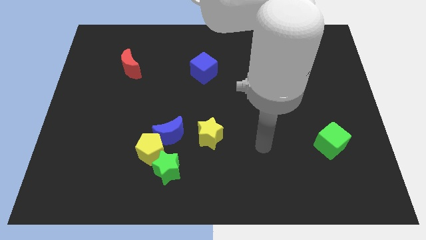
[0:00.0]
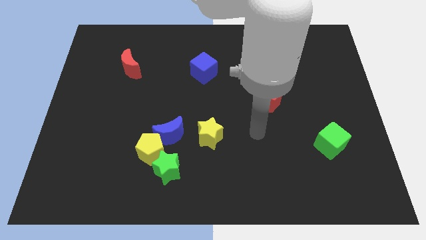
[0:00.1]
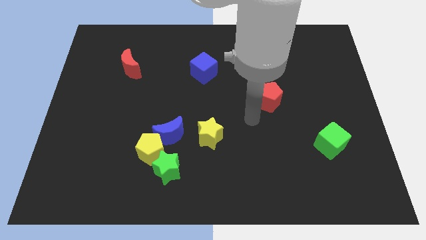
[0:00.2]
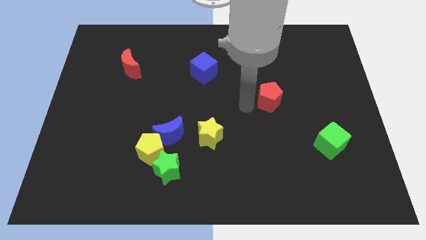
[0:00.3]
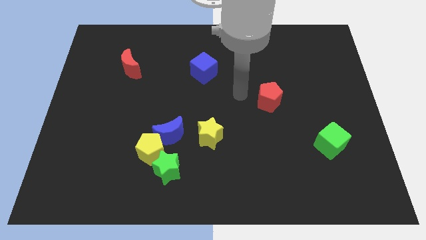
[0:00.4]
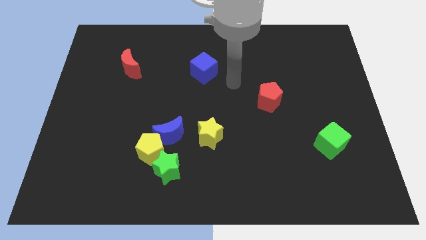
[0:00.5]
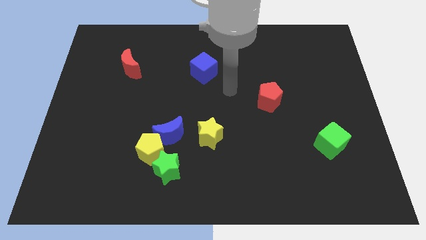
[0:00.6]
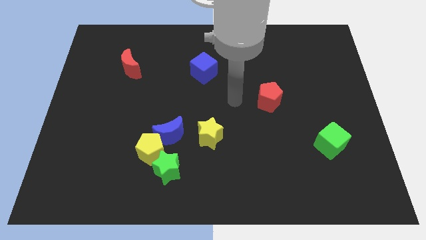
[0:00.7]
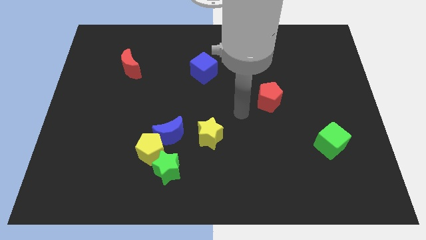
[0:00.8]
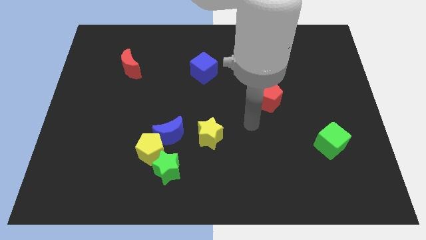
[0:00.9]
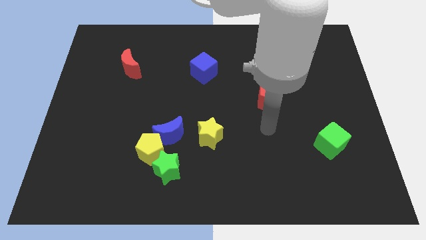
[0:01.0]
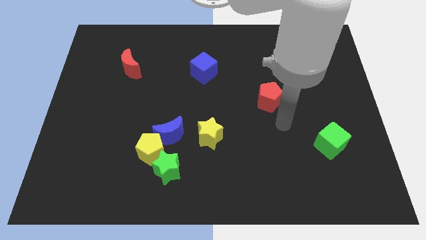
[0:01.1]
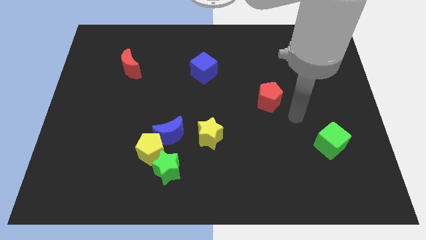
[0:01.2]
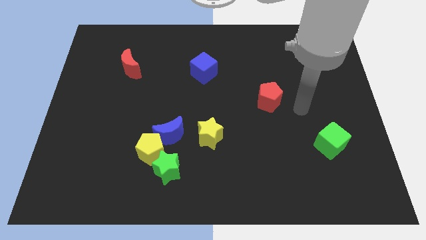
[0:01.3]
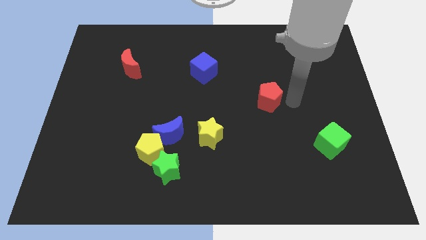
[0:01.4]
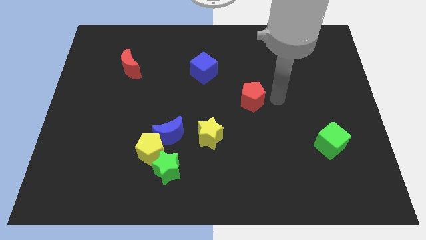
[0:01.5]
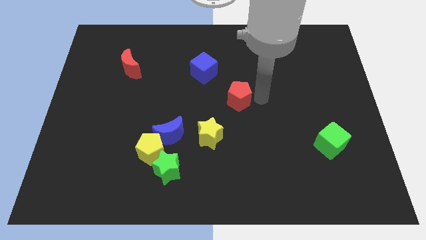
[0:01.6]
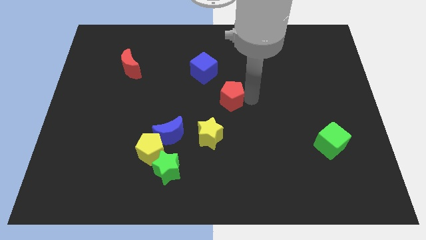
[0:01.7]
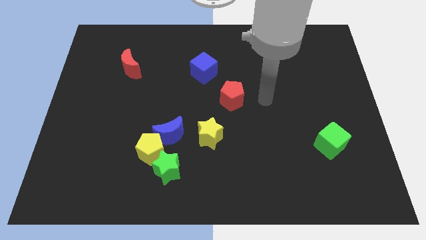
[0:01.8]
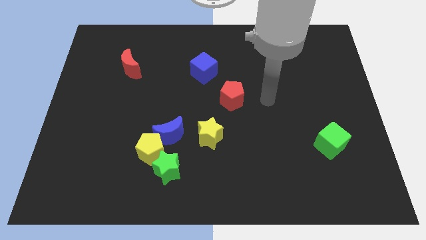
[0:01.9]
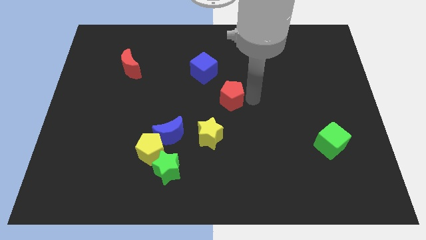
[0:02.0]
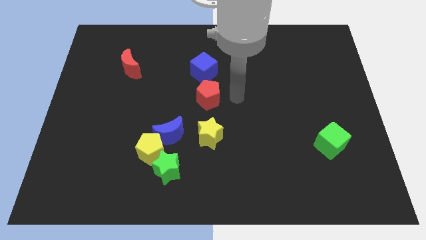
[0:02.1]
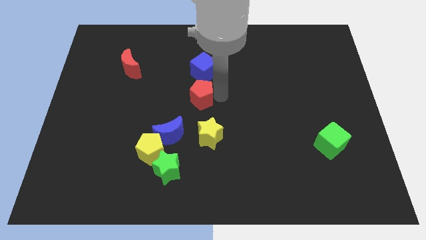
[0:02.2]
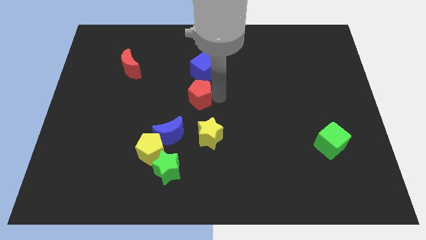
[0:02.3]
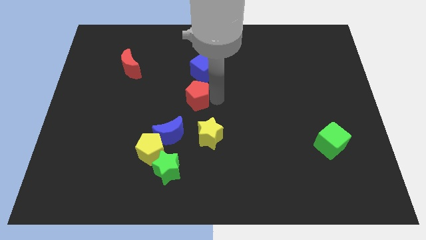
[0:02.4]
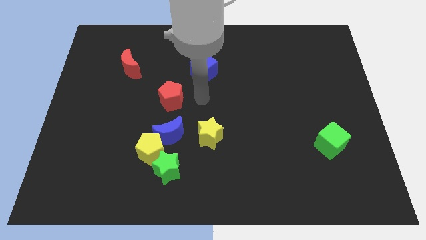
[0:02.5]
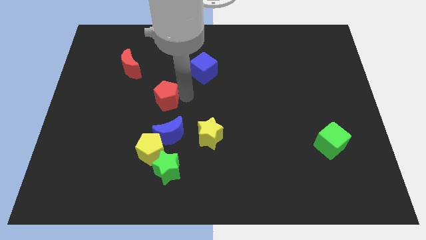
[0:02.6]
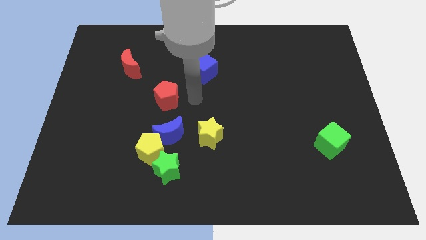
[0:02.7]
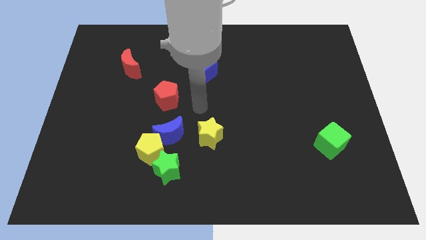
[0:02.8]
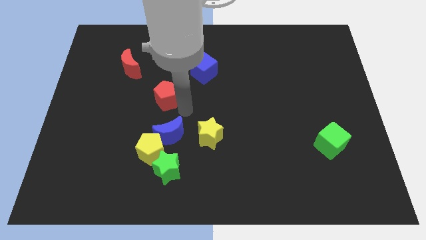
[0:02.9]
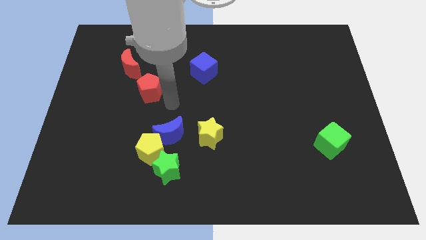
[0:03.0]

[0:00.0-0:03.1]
place the red pentagon above the yellow pentagon

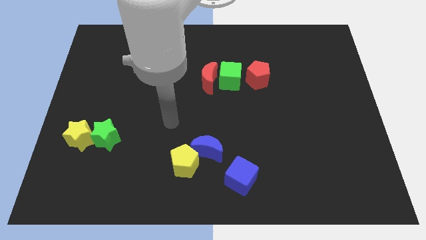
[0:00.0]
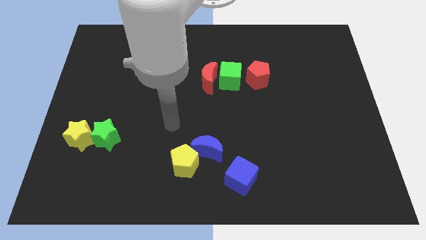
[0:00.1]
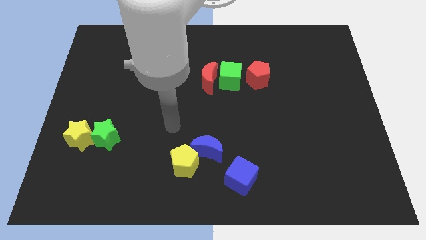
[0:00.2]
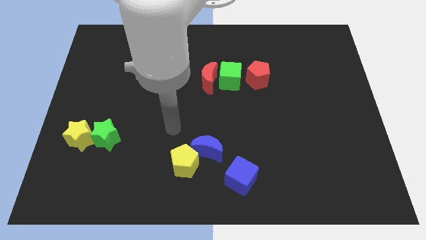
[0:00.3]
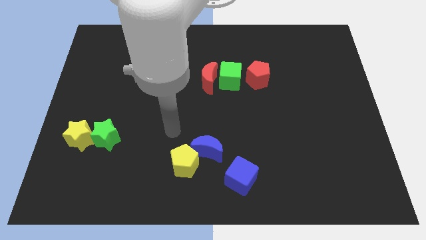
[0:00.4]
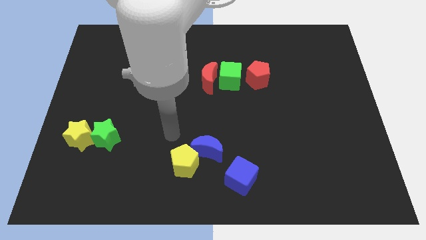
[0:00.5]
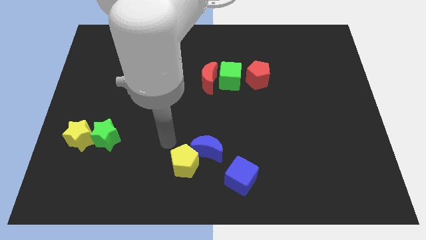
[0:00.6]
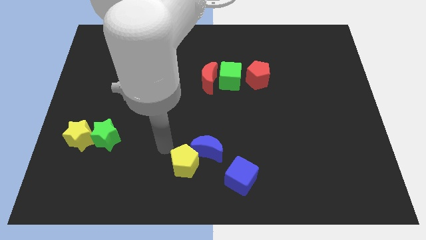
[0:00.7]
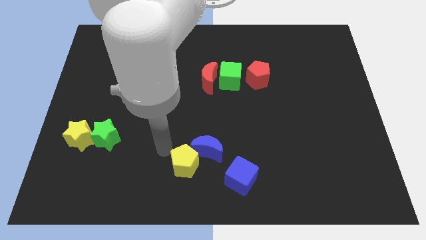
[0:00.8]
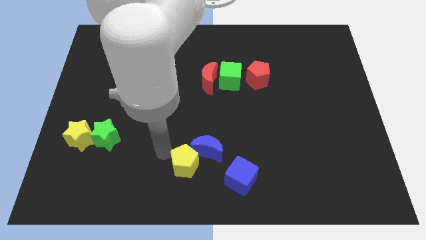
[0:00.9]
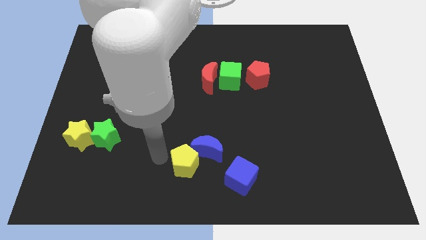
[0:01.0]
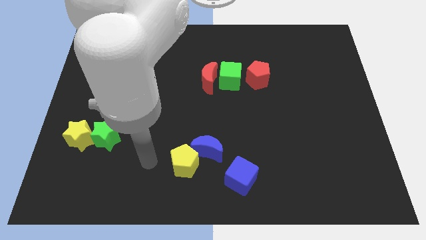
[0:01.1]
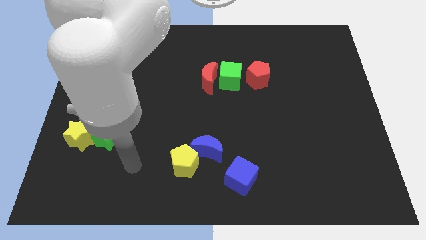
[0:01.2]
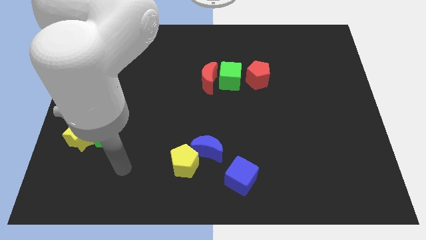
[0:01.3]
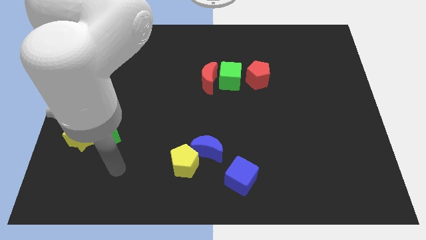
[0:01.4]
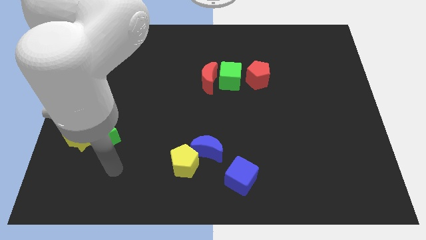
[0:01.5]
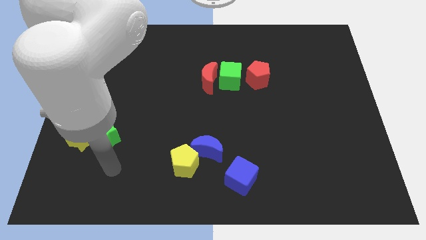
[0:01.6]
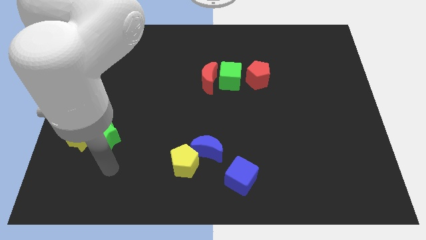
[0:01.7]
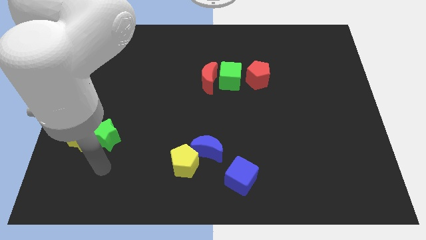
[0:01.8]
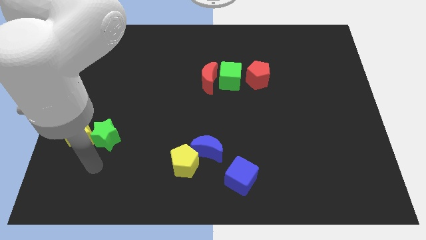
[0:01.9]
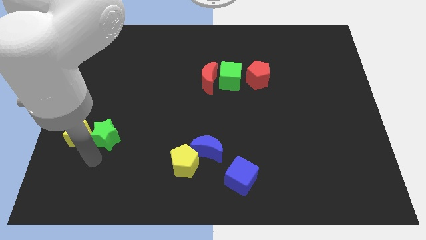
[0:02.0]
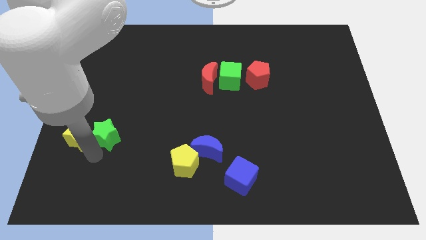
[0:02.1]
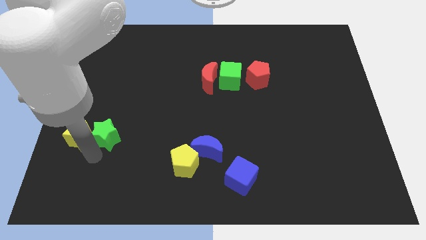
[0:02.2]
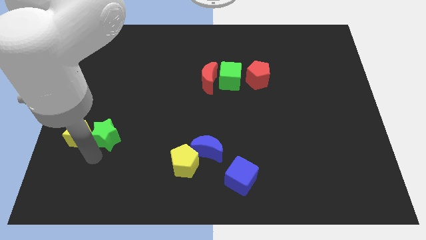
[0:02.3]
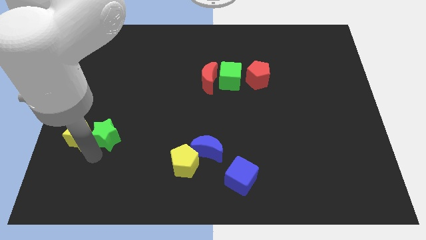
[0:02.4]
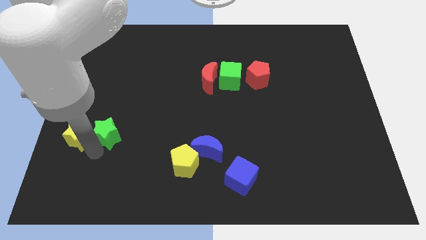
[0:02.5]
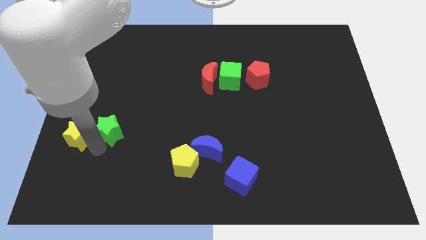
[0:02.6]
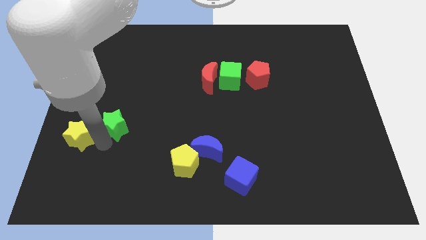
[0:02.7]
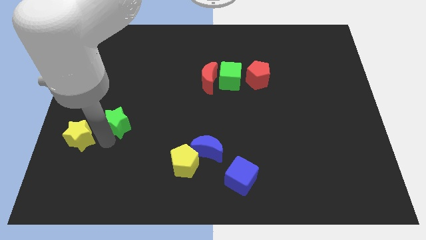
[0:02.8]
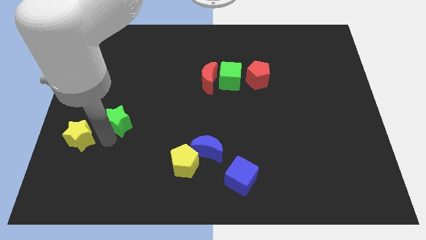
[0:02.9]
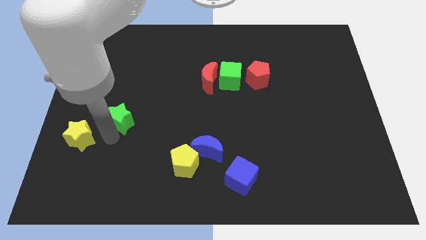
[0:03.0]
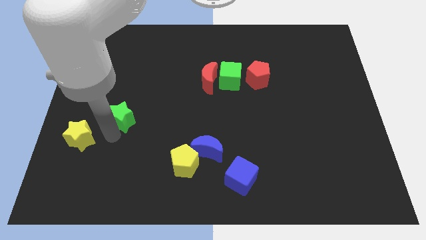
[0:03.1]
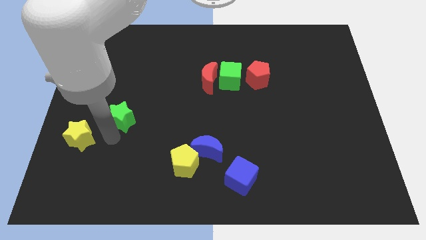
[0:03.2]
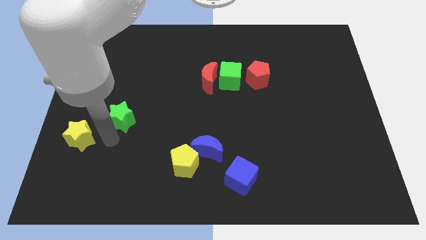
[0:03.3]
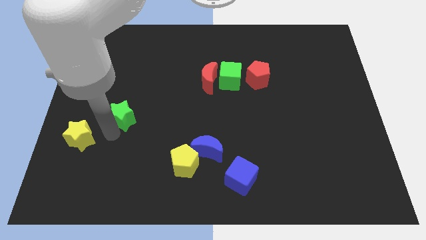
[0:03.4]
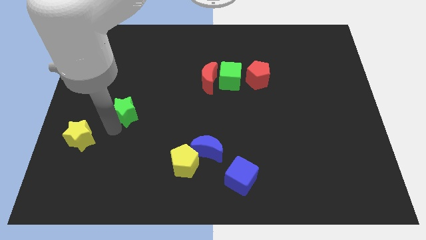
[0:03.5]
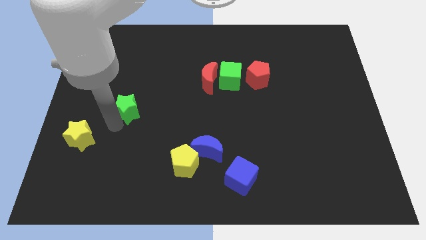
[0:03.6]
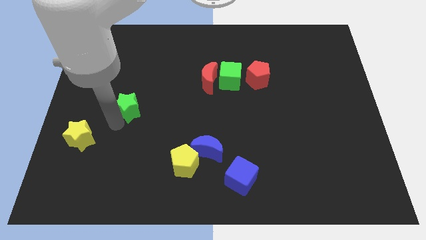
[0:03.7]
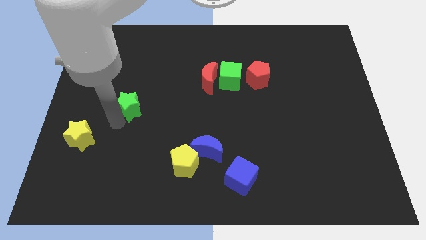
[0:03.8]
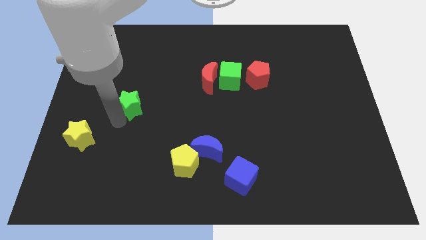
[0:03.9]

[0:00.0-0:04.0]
separate yellow star and green star

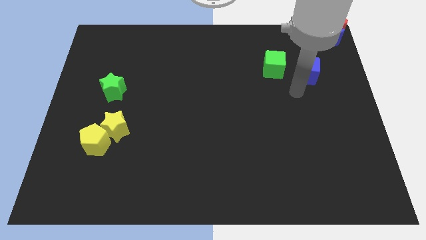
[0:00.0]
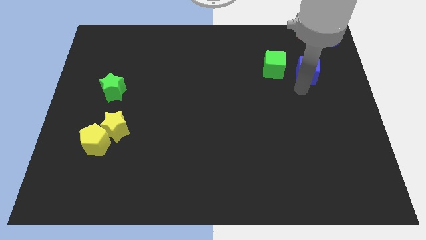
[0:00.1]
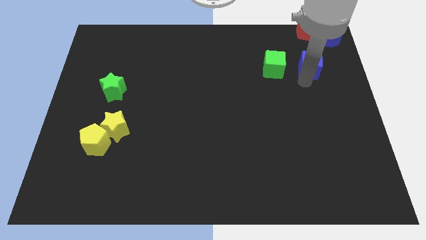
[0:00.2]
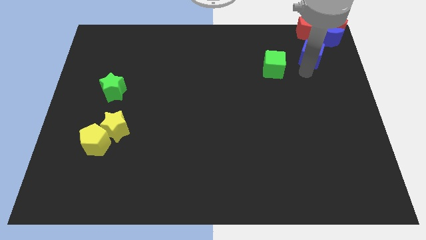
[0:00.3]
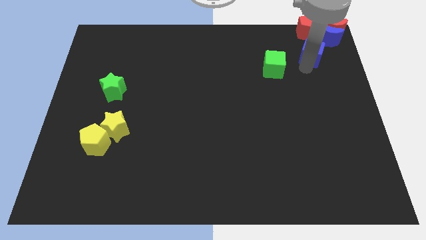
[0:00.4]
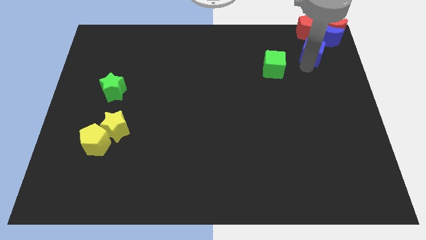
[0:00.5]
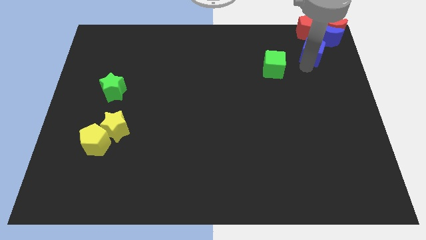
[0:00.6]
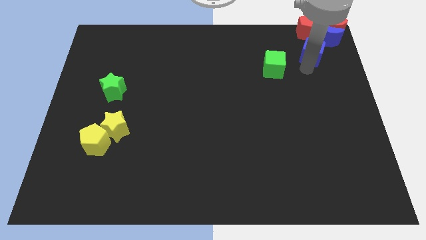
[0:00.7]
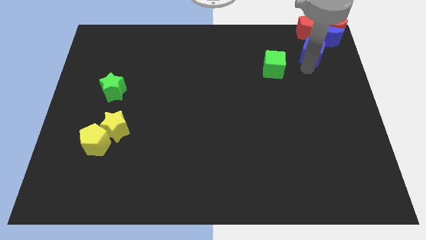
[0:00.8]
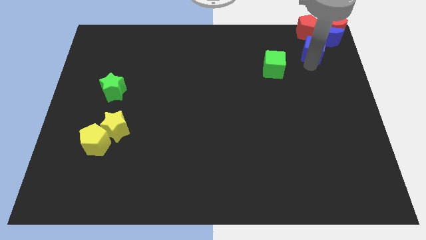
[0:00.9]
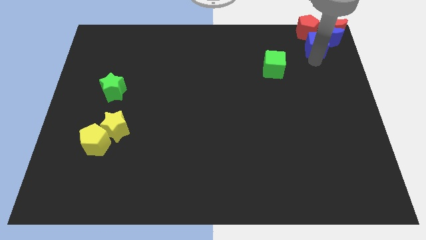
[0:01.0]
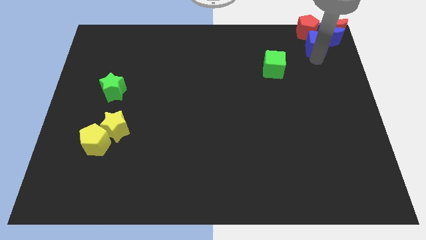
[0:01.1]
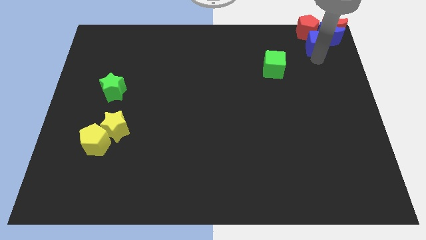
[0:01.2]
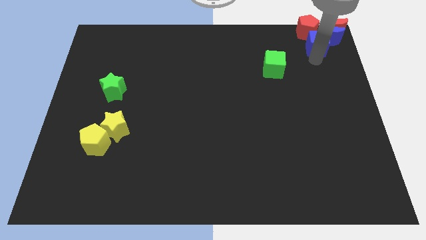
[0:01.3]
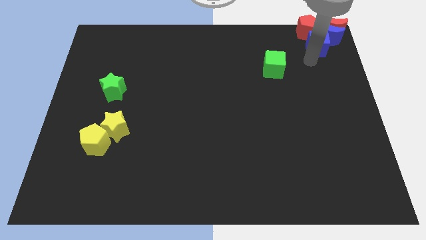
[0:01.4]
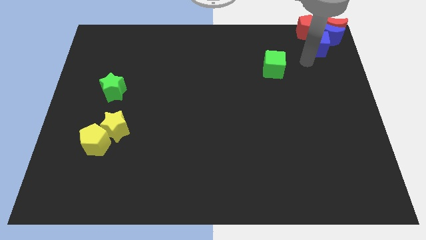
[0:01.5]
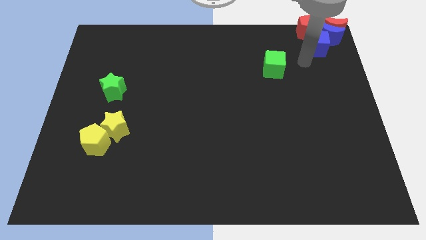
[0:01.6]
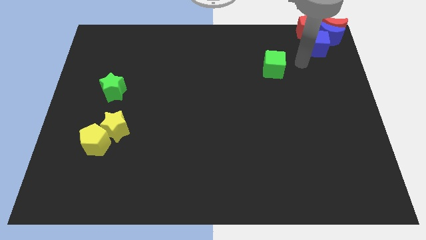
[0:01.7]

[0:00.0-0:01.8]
move the blue cube below the blue crescent and red pentagon

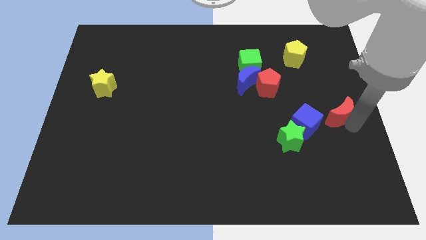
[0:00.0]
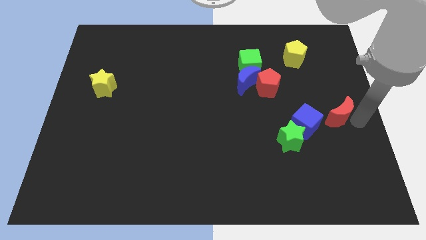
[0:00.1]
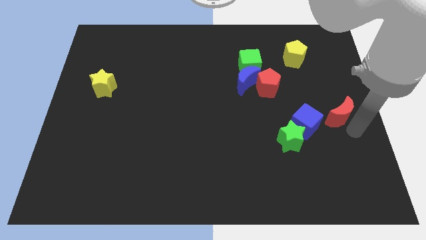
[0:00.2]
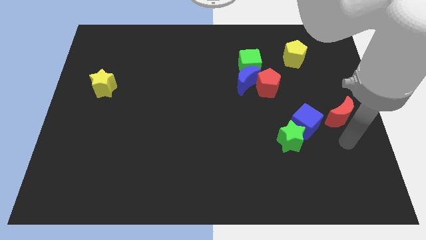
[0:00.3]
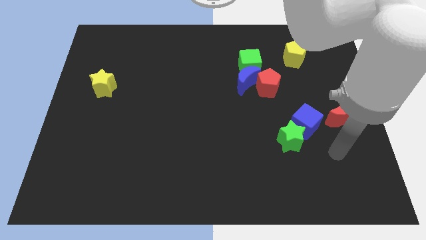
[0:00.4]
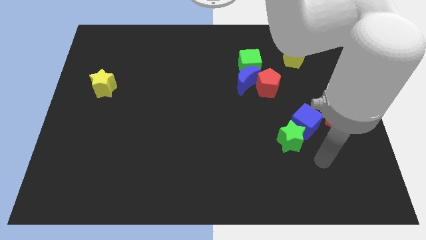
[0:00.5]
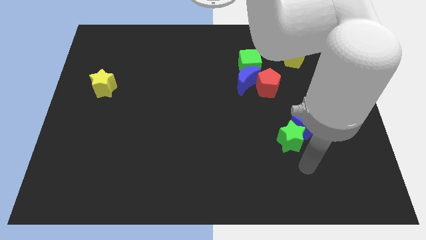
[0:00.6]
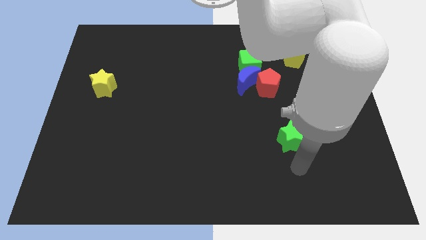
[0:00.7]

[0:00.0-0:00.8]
move the red crescent towards the right center of the board
